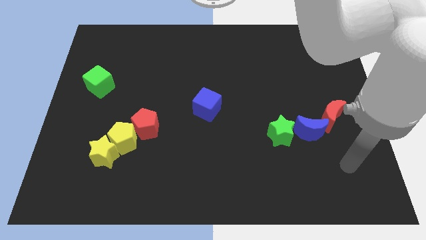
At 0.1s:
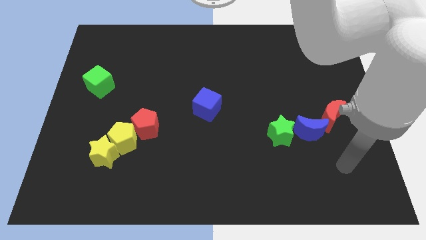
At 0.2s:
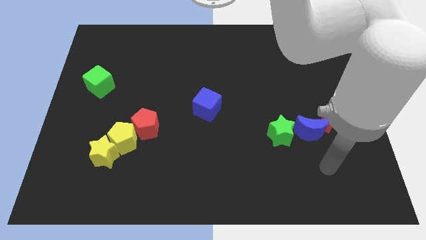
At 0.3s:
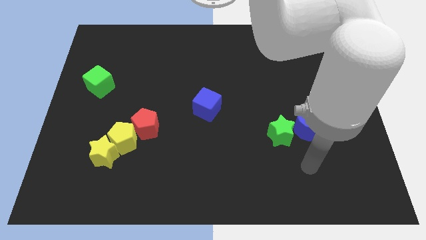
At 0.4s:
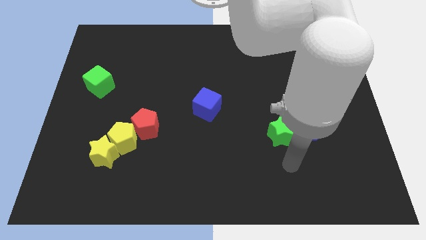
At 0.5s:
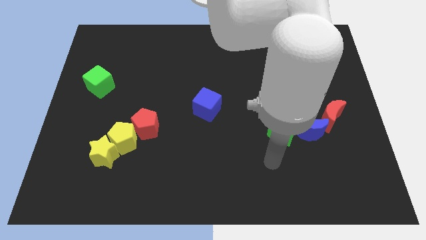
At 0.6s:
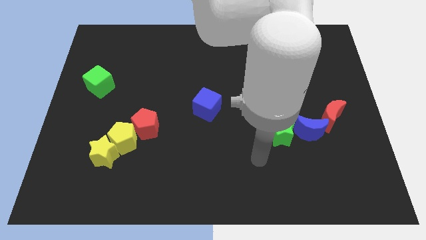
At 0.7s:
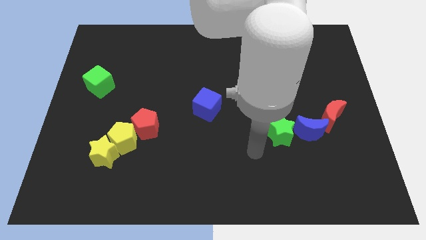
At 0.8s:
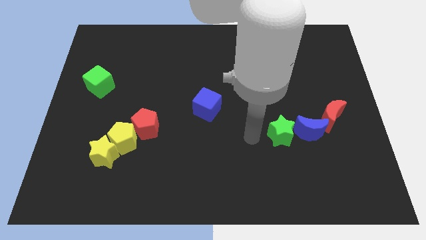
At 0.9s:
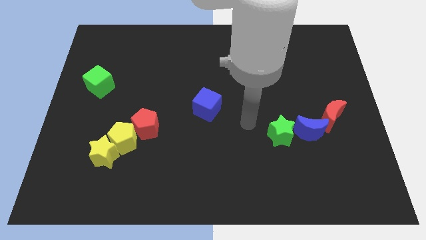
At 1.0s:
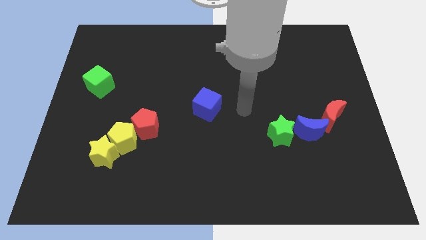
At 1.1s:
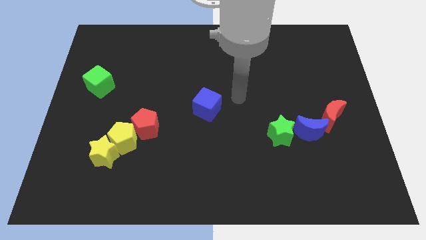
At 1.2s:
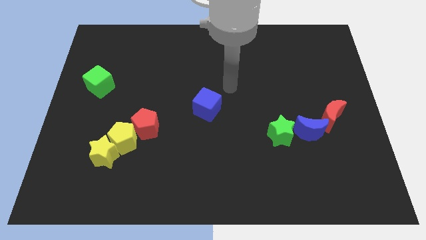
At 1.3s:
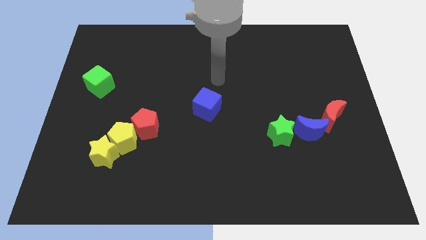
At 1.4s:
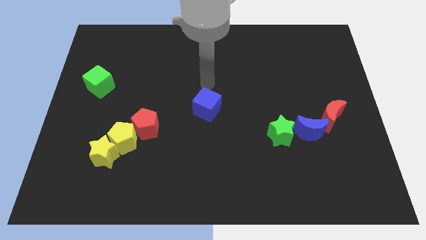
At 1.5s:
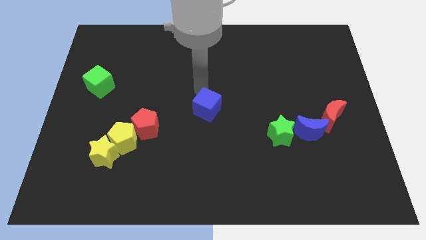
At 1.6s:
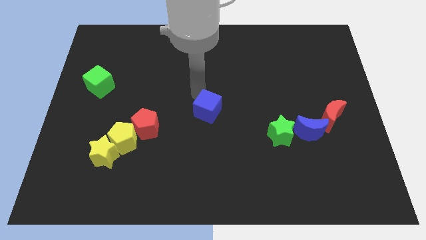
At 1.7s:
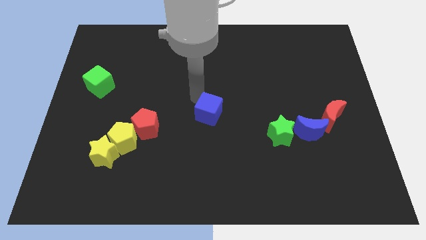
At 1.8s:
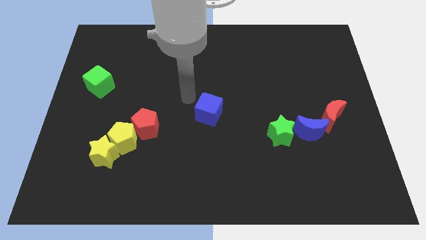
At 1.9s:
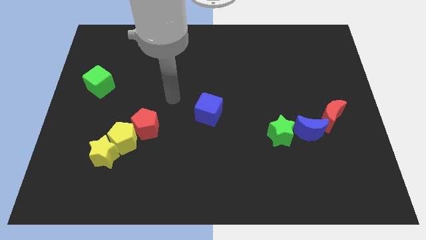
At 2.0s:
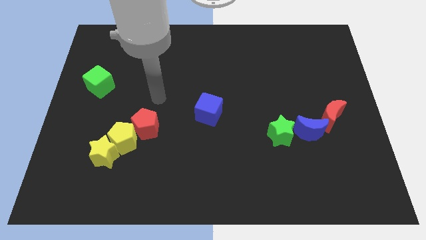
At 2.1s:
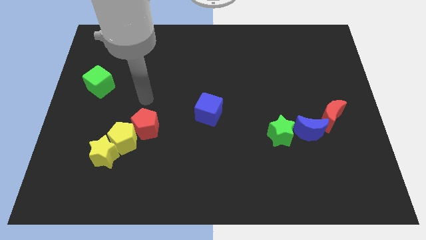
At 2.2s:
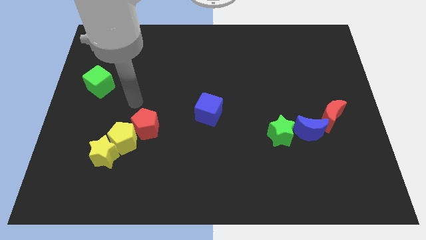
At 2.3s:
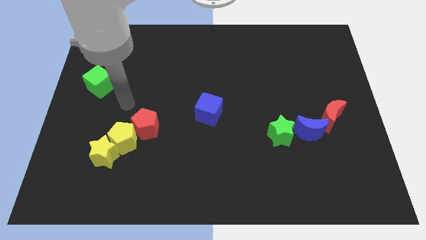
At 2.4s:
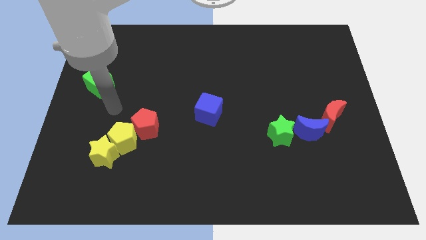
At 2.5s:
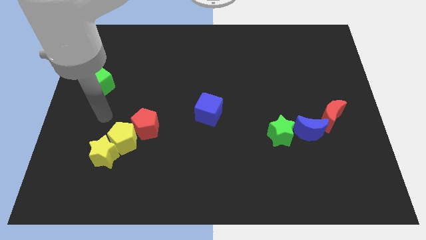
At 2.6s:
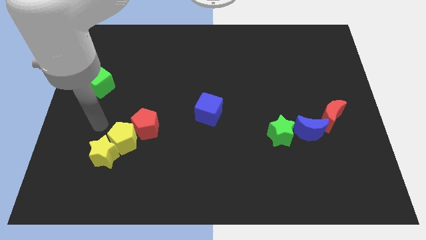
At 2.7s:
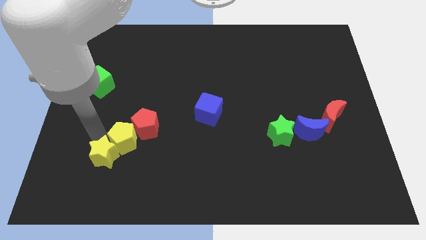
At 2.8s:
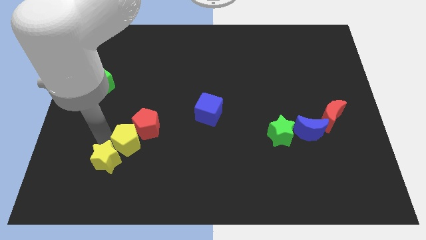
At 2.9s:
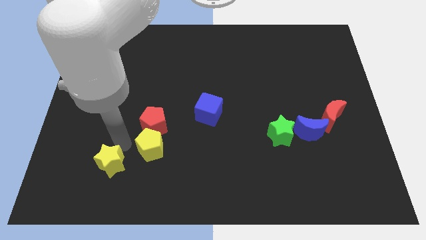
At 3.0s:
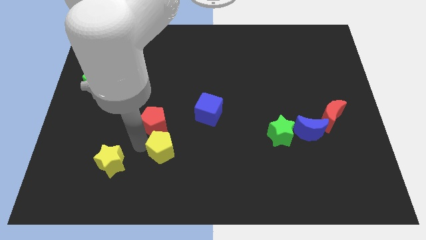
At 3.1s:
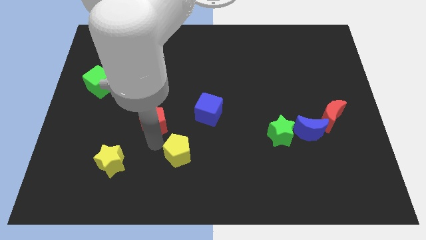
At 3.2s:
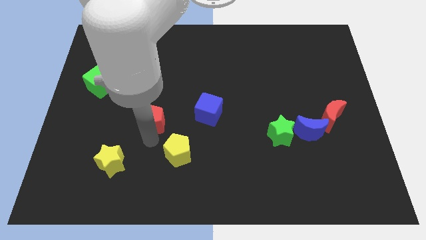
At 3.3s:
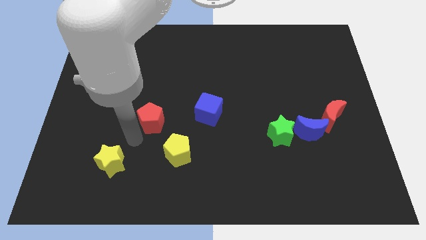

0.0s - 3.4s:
separate yellow pentagon from green star

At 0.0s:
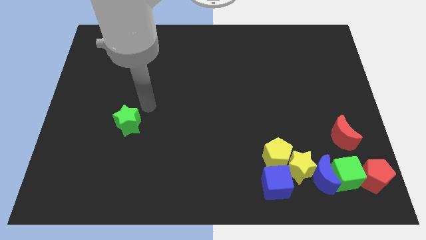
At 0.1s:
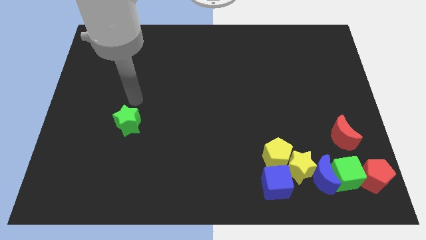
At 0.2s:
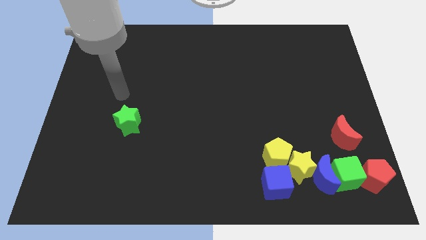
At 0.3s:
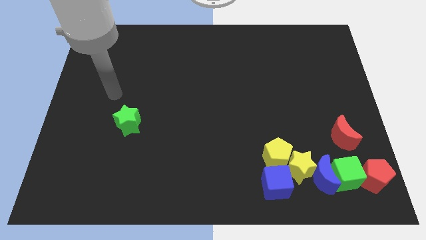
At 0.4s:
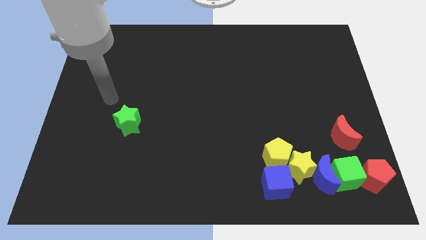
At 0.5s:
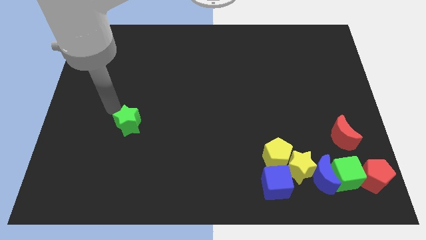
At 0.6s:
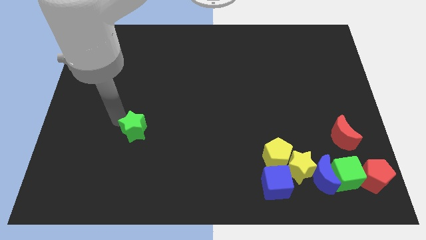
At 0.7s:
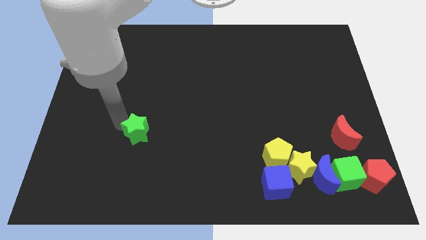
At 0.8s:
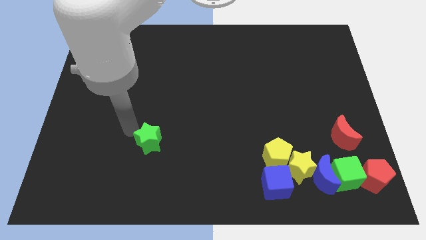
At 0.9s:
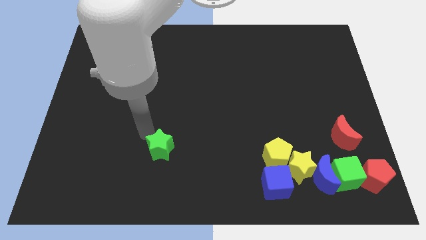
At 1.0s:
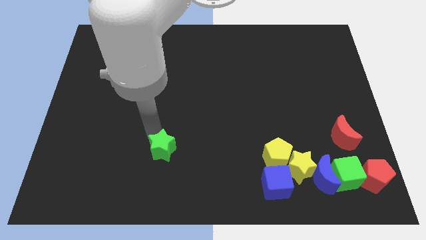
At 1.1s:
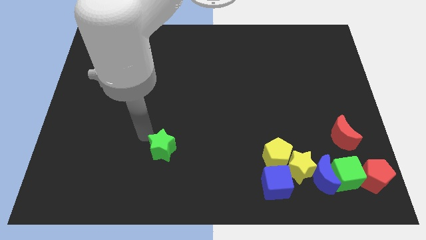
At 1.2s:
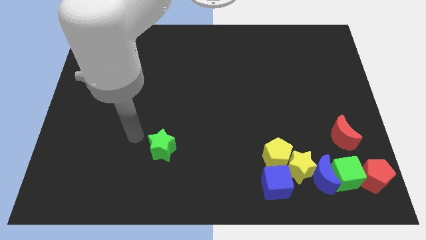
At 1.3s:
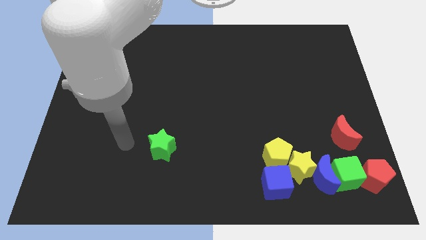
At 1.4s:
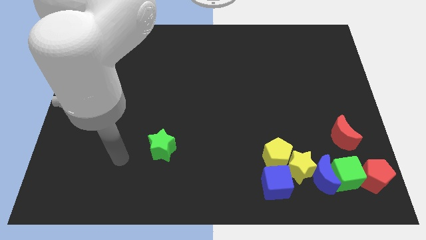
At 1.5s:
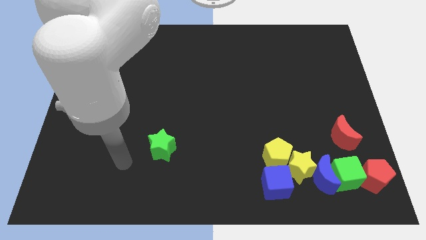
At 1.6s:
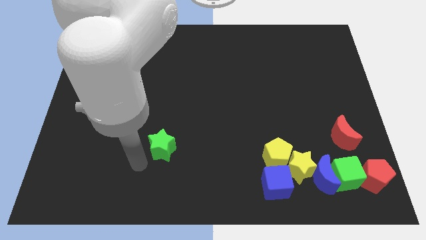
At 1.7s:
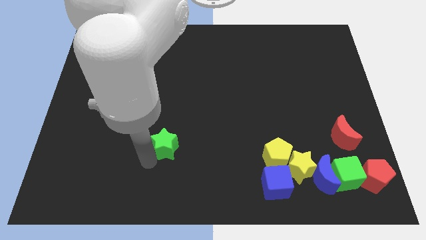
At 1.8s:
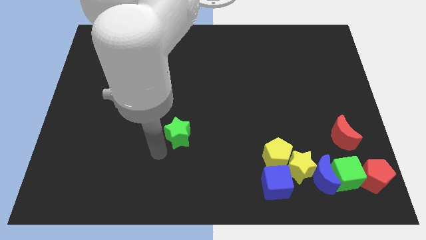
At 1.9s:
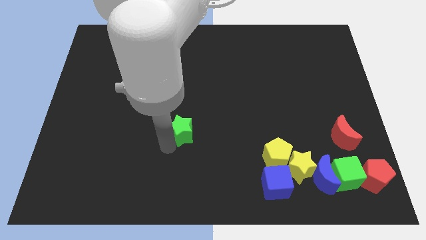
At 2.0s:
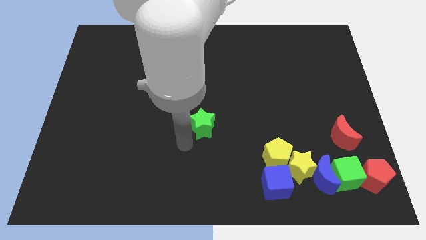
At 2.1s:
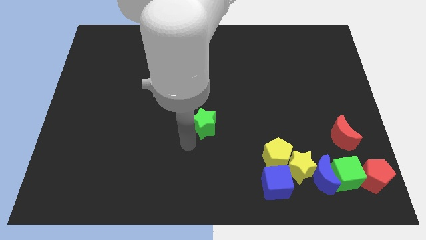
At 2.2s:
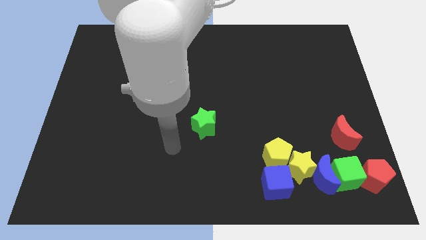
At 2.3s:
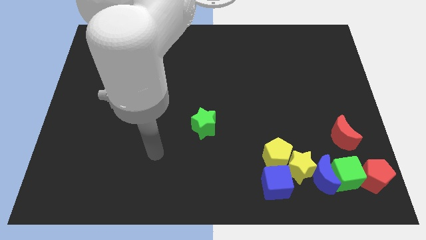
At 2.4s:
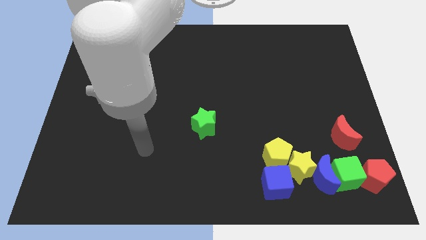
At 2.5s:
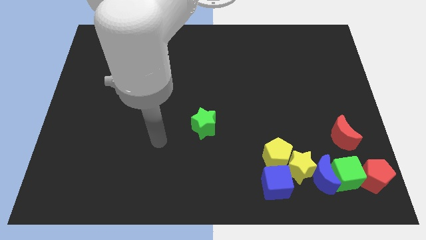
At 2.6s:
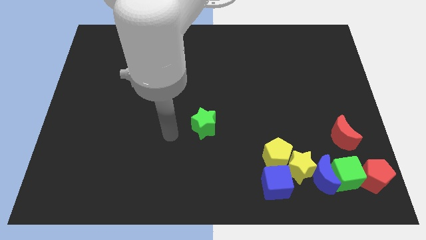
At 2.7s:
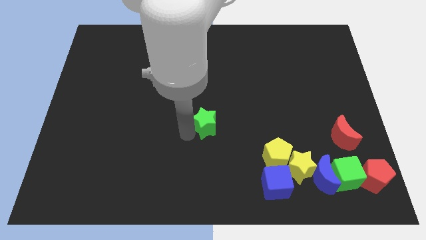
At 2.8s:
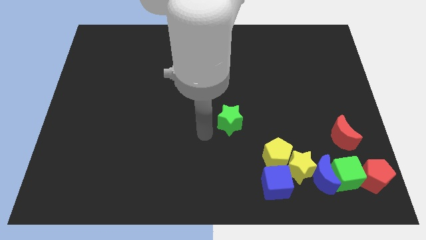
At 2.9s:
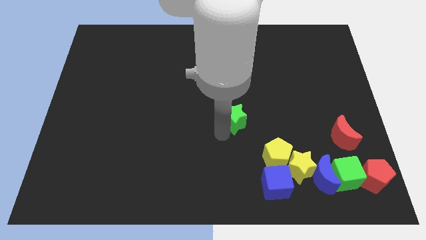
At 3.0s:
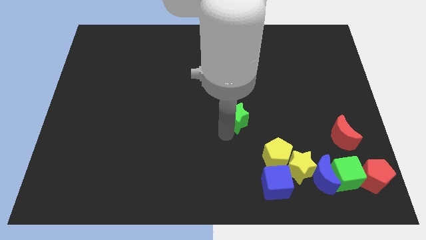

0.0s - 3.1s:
slide green star to the top left of yellow pentagon

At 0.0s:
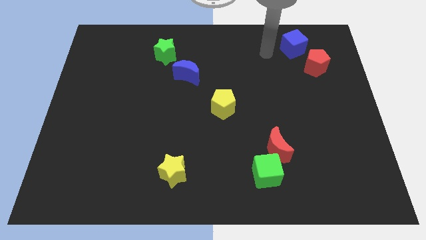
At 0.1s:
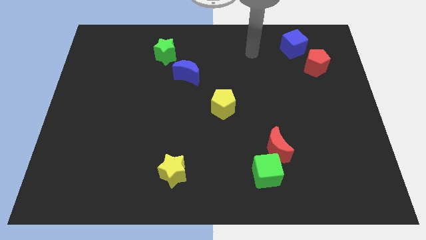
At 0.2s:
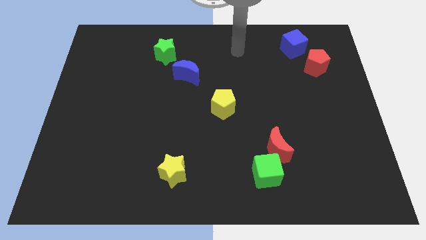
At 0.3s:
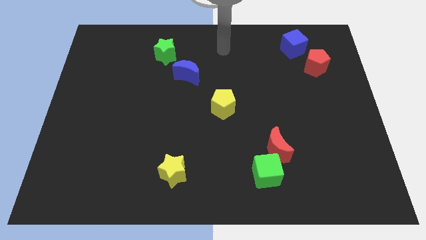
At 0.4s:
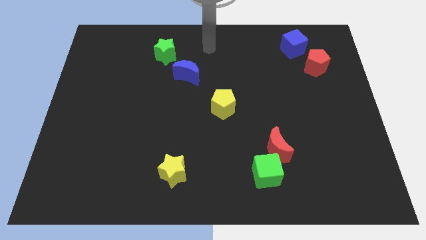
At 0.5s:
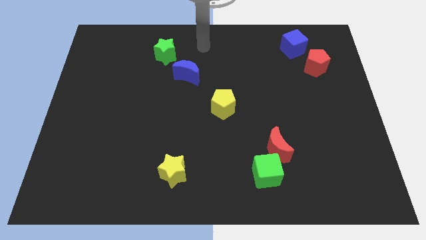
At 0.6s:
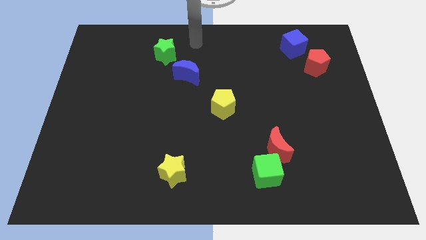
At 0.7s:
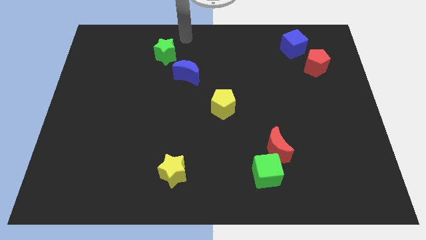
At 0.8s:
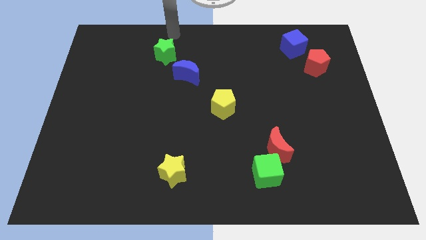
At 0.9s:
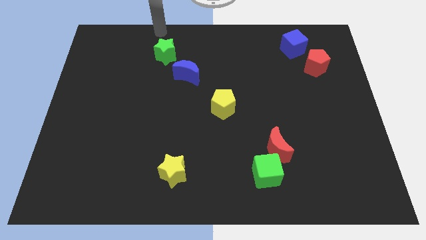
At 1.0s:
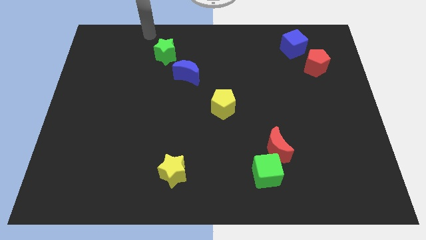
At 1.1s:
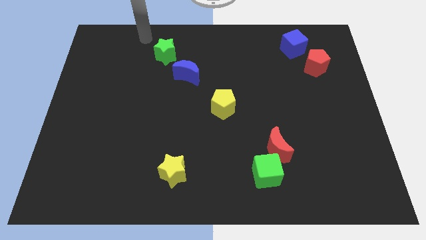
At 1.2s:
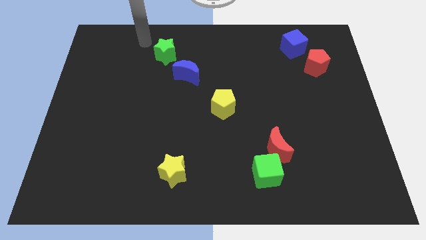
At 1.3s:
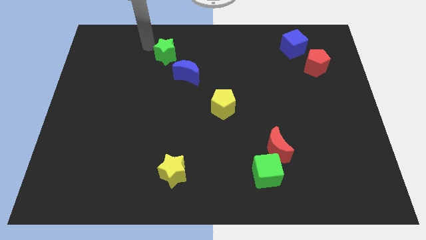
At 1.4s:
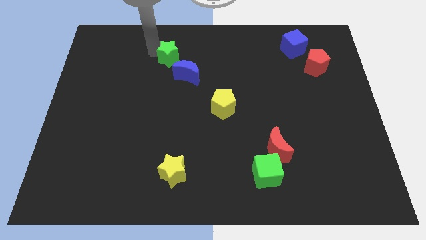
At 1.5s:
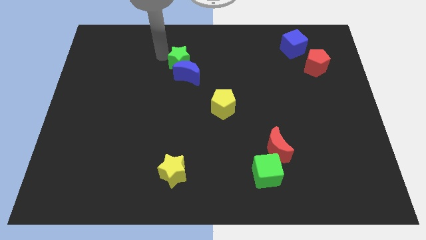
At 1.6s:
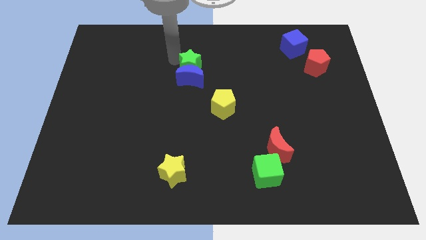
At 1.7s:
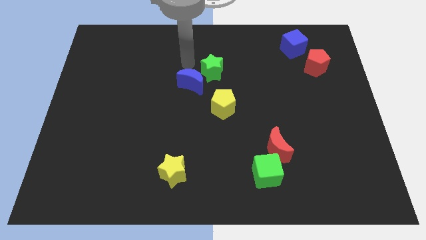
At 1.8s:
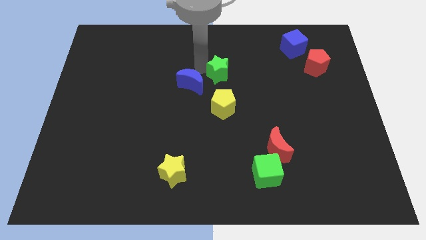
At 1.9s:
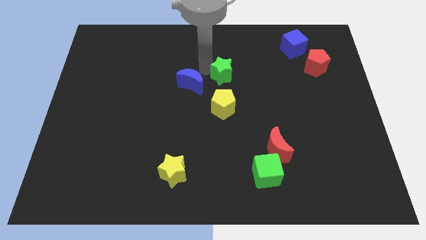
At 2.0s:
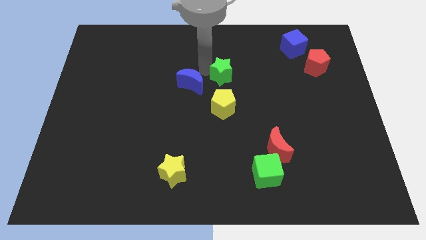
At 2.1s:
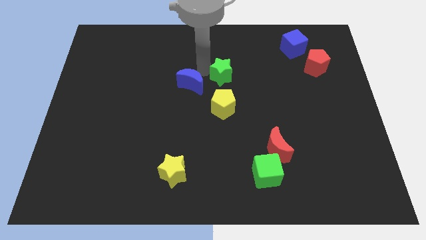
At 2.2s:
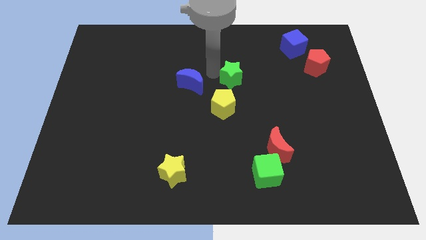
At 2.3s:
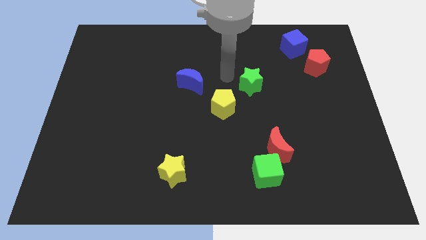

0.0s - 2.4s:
move green star diagonally

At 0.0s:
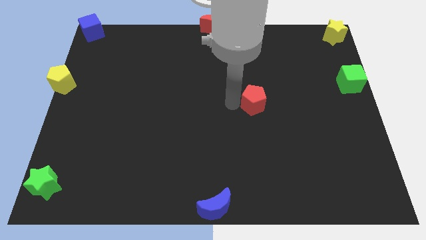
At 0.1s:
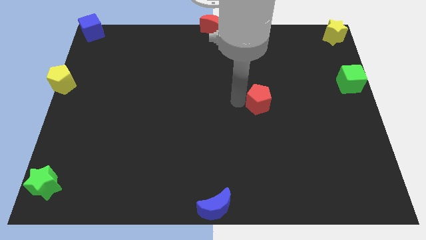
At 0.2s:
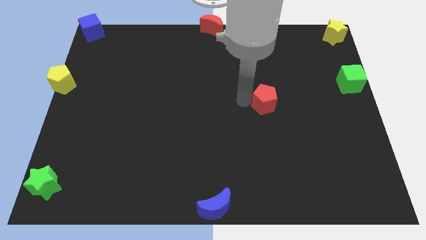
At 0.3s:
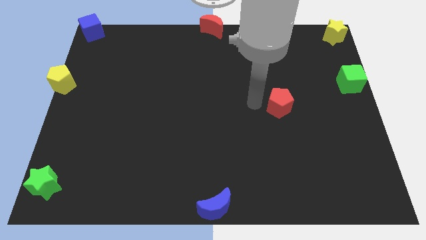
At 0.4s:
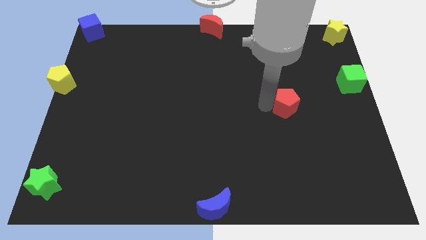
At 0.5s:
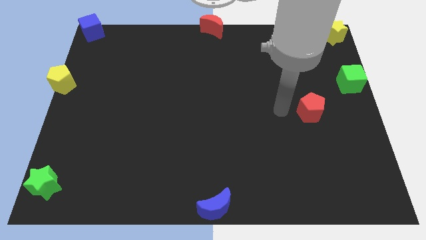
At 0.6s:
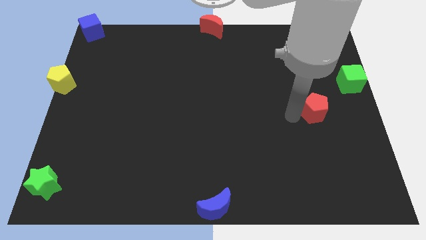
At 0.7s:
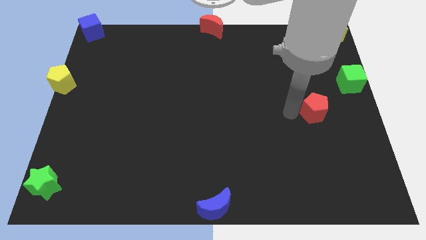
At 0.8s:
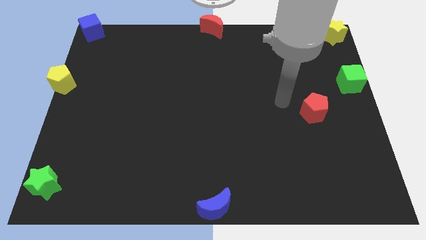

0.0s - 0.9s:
push the red pentagon diagonal to the green cube
